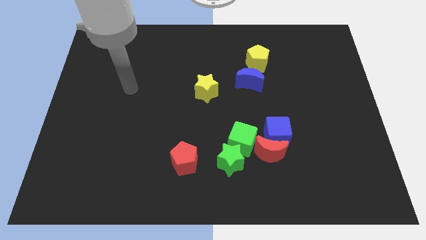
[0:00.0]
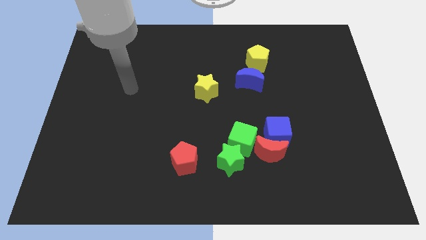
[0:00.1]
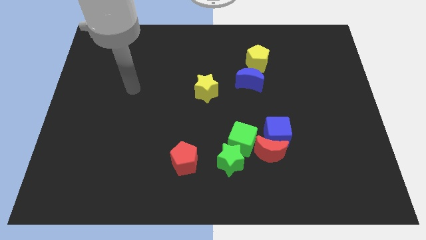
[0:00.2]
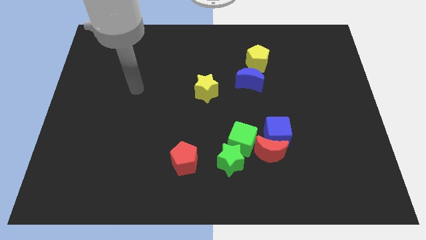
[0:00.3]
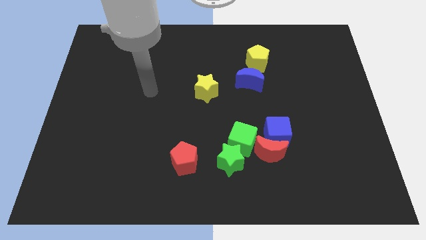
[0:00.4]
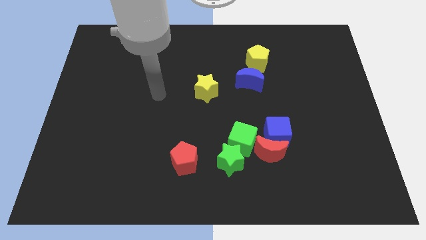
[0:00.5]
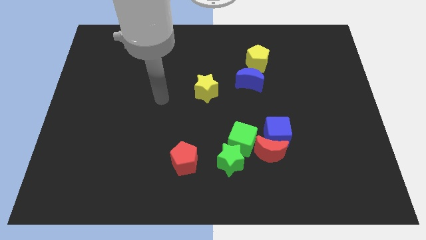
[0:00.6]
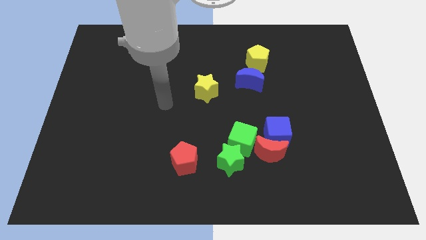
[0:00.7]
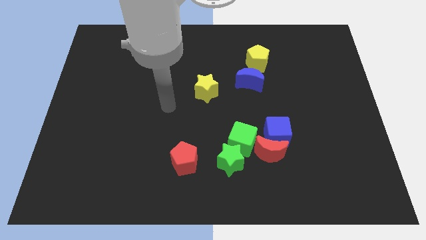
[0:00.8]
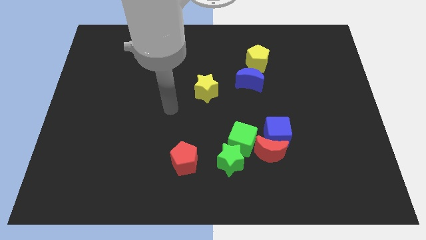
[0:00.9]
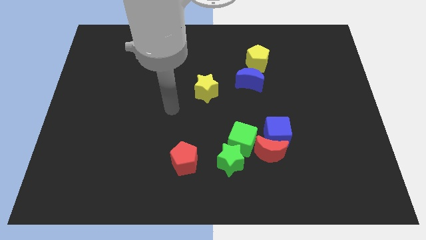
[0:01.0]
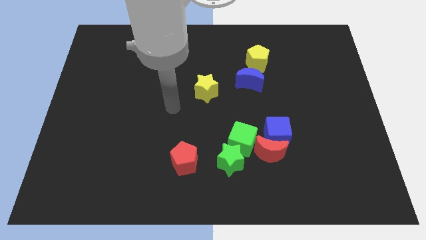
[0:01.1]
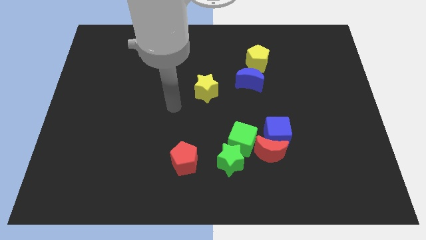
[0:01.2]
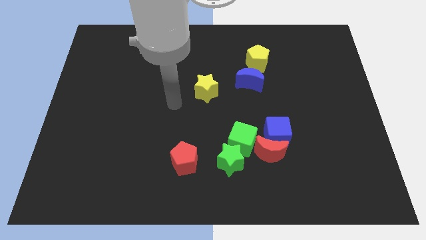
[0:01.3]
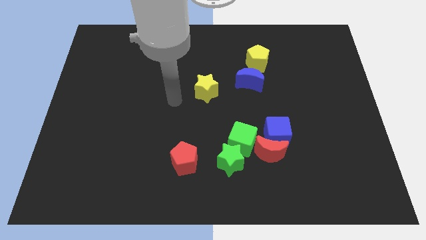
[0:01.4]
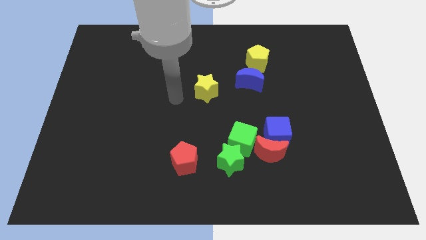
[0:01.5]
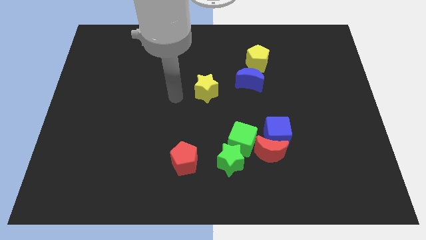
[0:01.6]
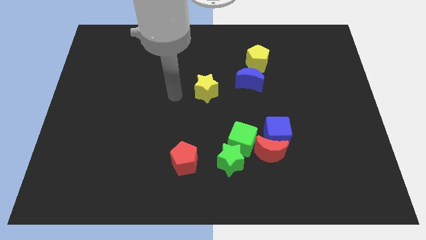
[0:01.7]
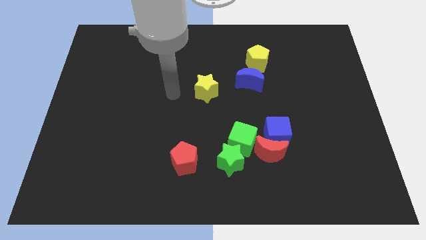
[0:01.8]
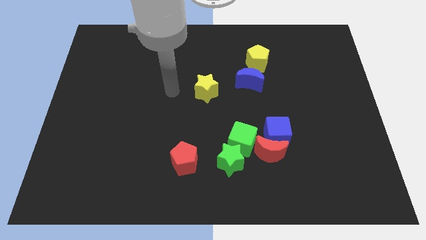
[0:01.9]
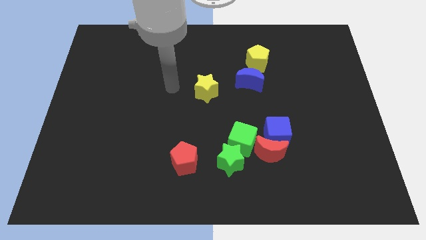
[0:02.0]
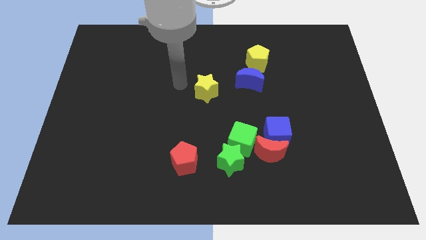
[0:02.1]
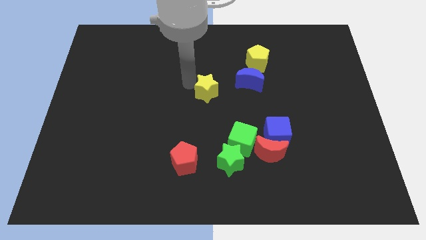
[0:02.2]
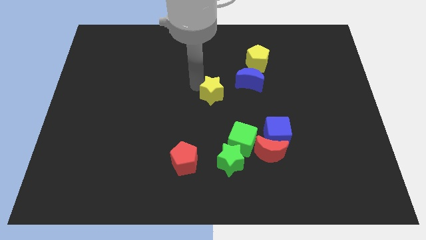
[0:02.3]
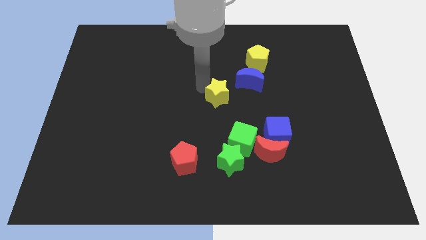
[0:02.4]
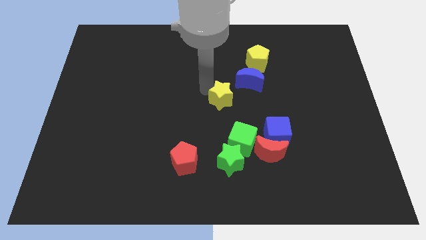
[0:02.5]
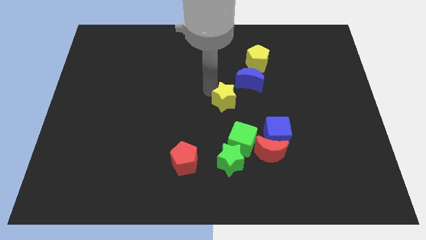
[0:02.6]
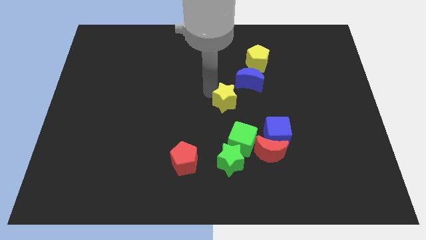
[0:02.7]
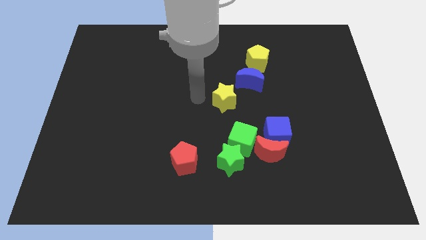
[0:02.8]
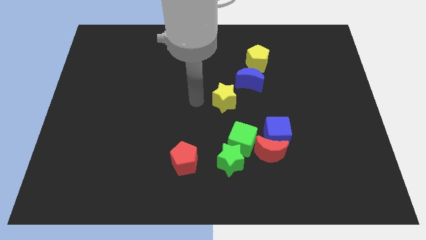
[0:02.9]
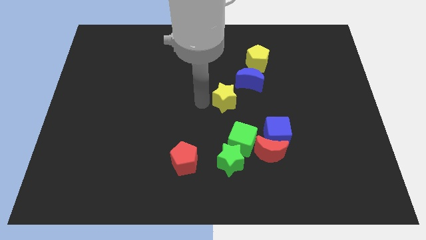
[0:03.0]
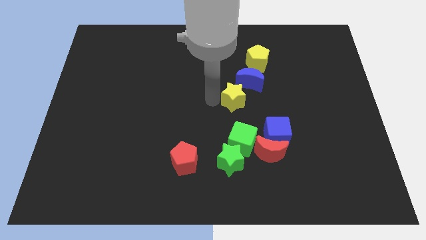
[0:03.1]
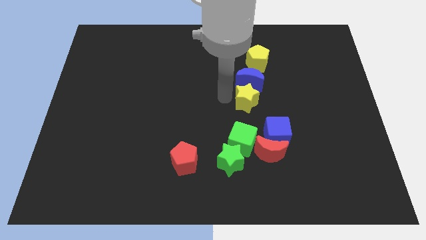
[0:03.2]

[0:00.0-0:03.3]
move the yelllow star below the blue crescent

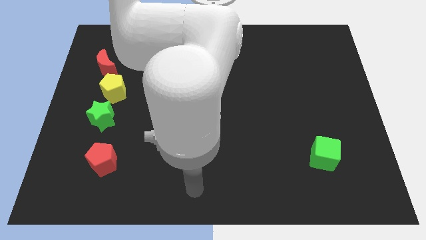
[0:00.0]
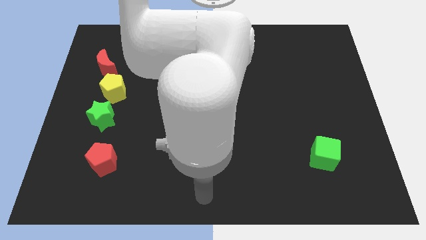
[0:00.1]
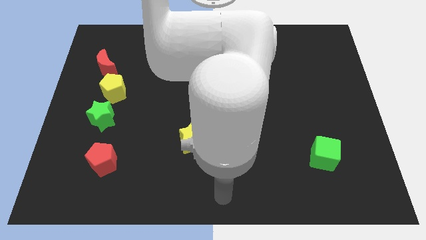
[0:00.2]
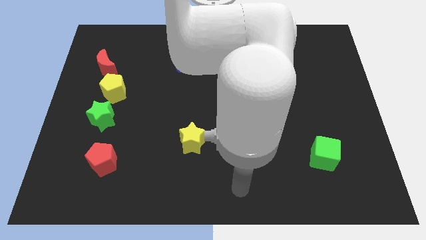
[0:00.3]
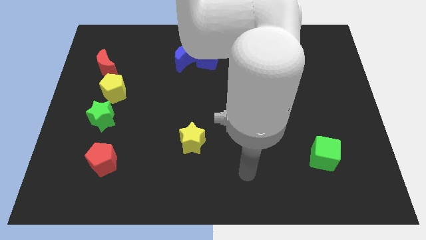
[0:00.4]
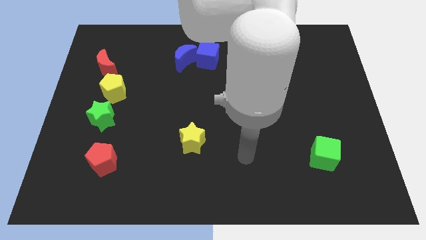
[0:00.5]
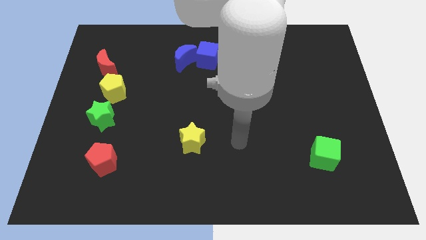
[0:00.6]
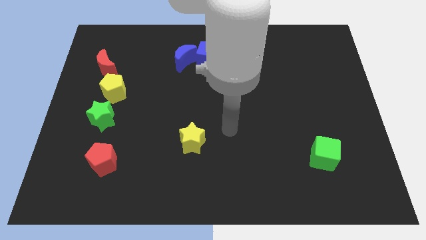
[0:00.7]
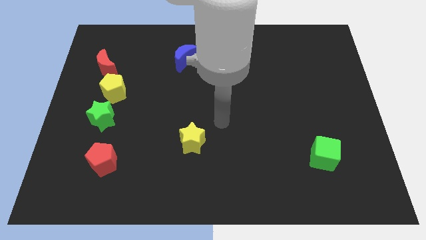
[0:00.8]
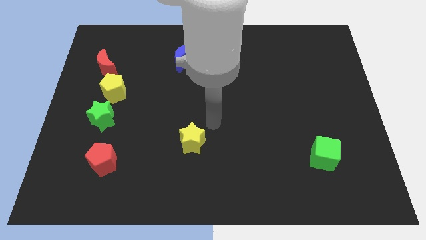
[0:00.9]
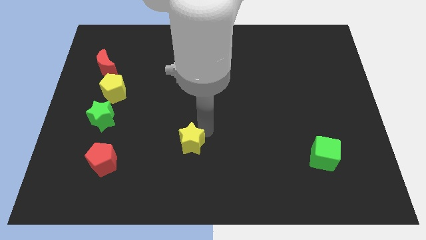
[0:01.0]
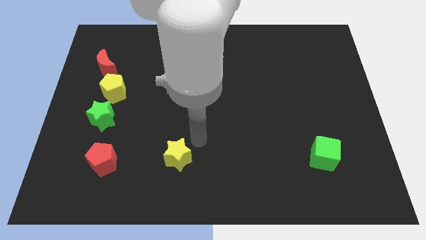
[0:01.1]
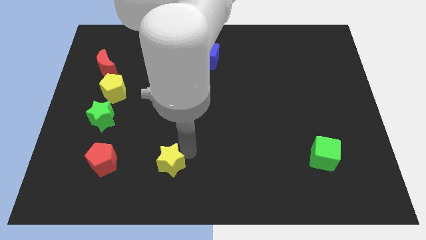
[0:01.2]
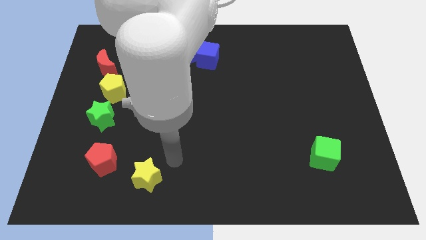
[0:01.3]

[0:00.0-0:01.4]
move the yellow star horizontally right to the red pentagon

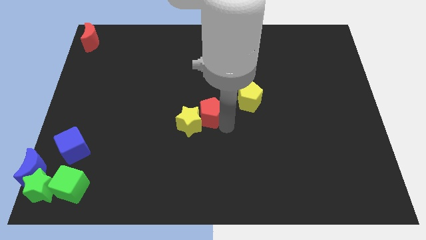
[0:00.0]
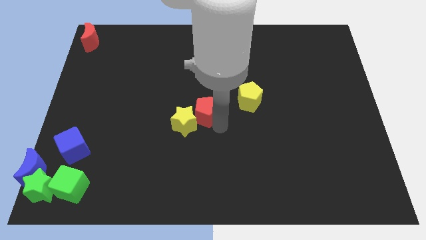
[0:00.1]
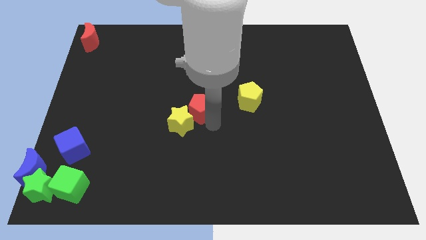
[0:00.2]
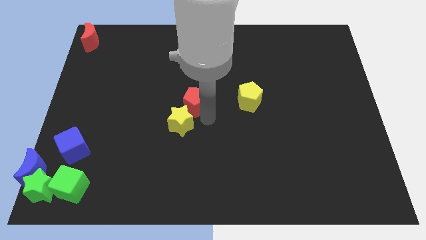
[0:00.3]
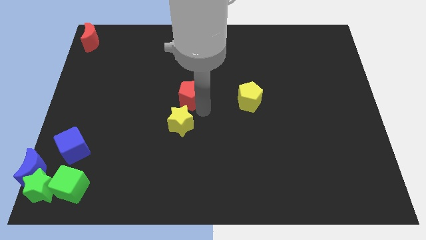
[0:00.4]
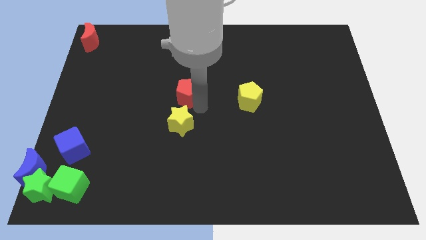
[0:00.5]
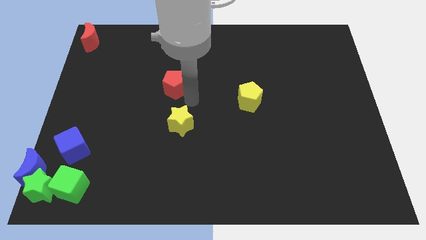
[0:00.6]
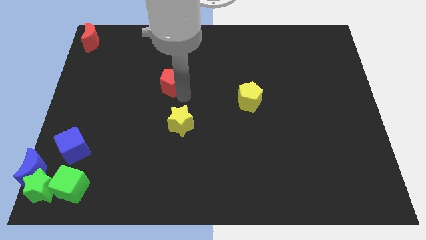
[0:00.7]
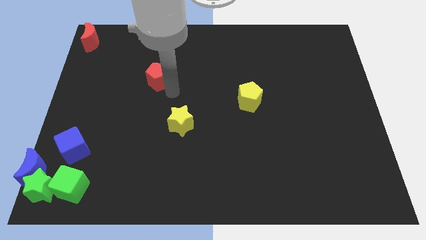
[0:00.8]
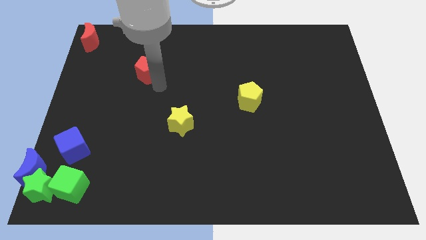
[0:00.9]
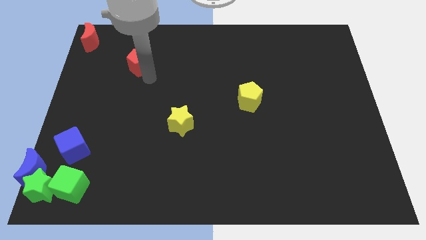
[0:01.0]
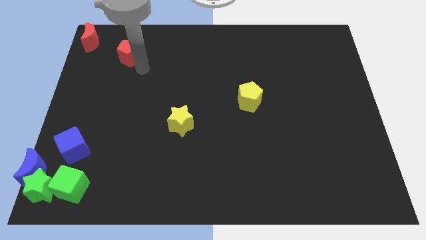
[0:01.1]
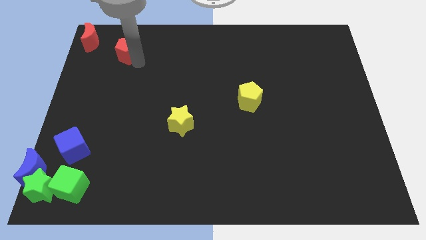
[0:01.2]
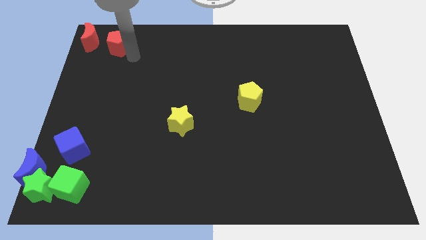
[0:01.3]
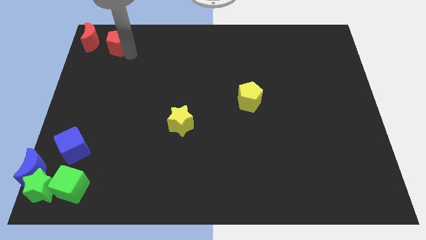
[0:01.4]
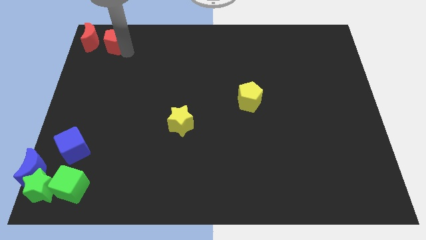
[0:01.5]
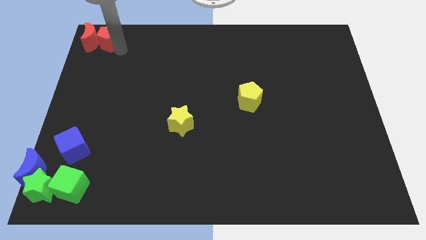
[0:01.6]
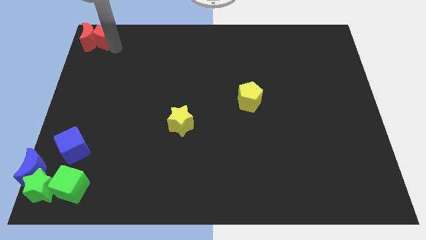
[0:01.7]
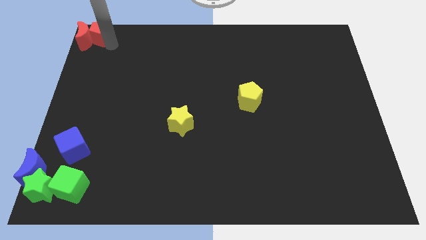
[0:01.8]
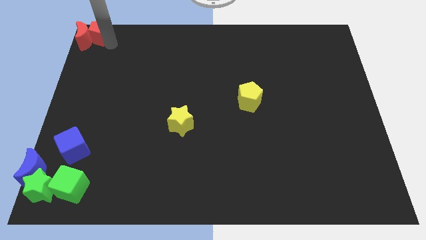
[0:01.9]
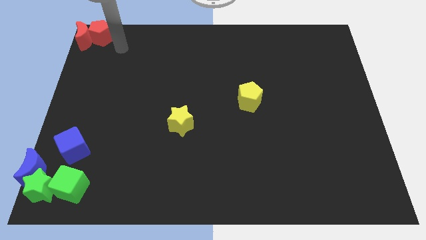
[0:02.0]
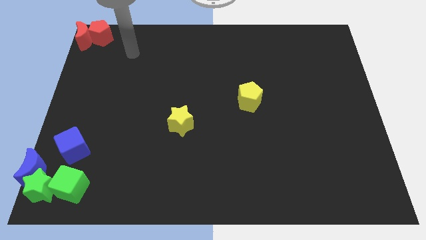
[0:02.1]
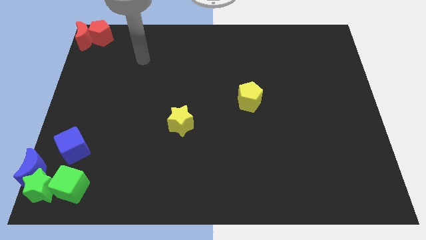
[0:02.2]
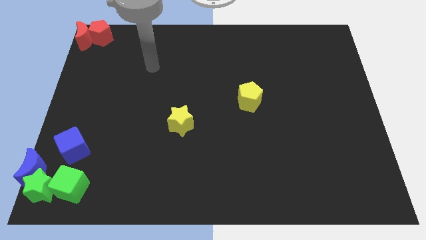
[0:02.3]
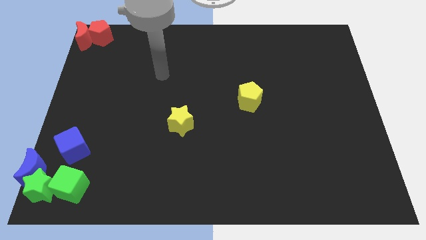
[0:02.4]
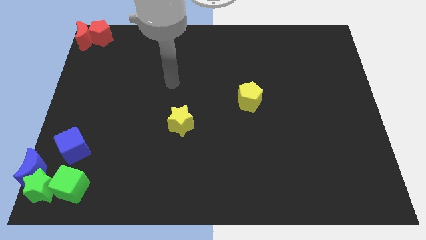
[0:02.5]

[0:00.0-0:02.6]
push the red pentagon into red moon

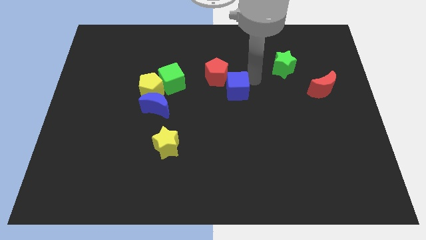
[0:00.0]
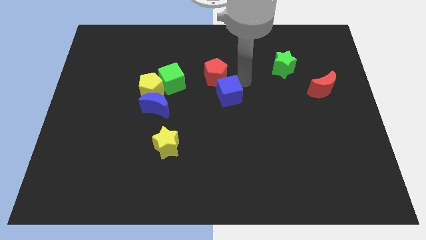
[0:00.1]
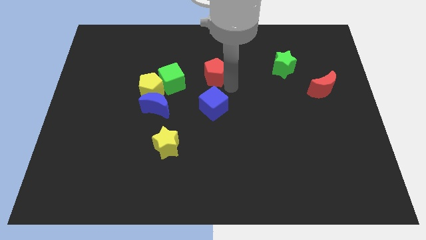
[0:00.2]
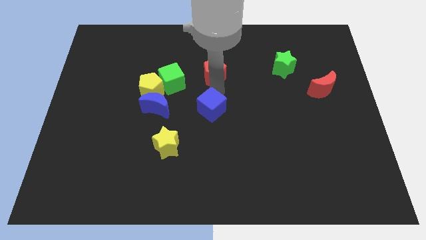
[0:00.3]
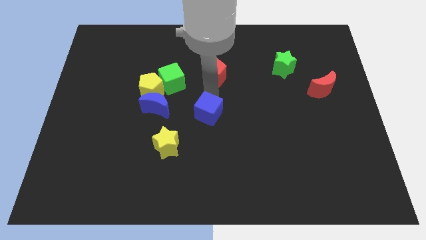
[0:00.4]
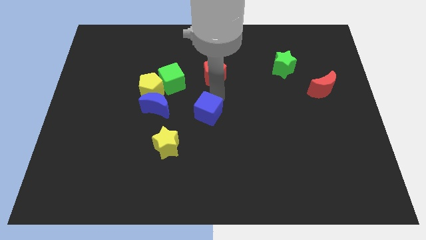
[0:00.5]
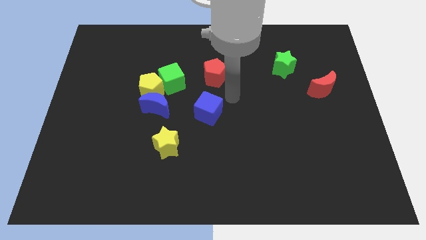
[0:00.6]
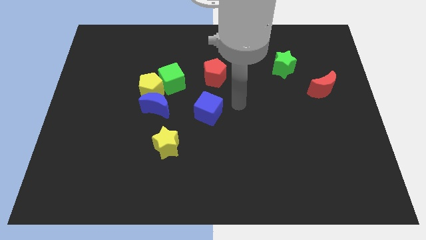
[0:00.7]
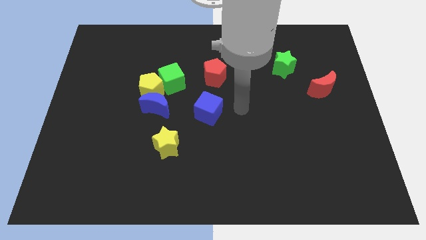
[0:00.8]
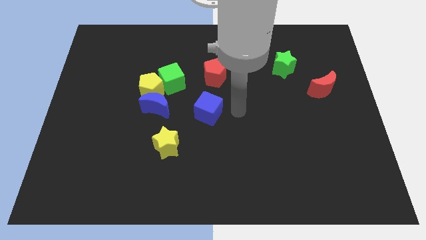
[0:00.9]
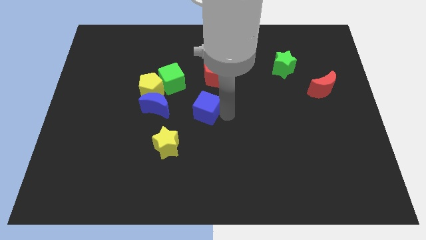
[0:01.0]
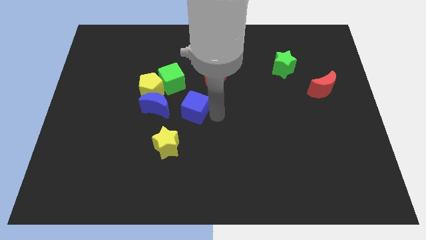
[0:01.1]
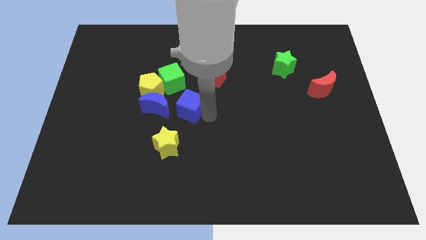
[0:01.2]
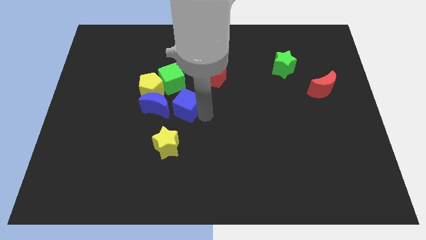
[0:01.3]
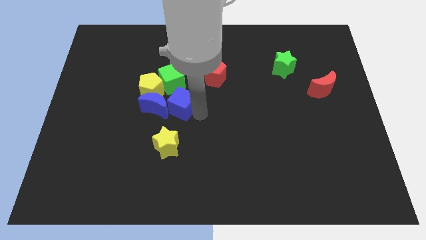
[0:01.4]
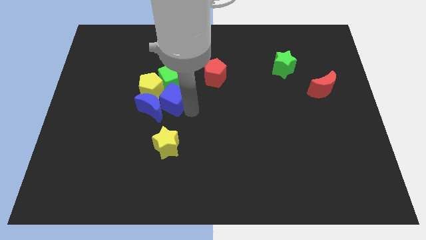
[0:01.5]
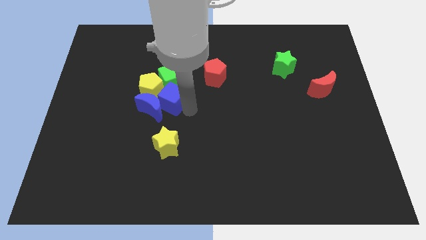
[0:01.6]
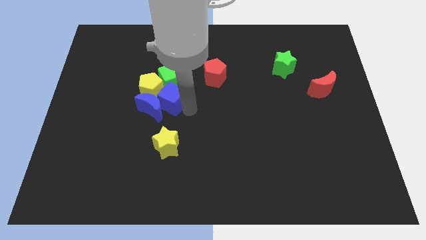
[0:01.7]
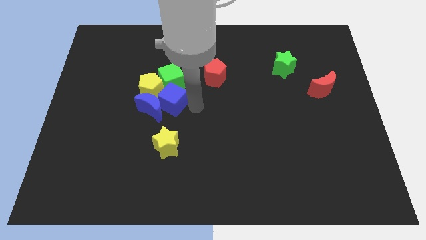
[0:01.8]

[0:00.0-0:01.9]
move blue cube right beside the blue moon
